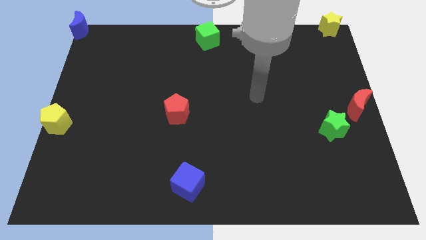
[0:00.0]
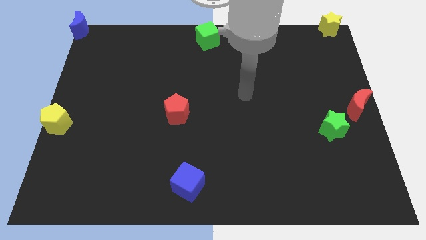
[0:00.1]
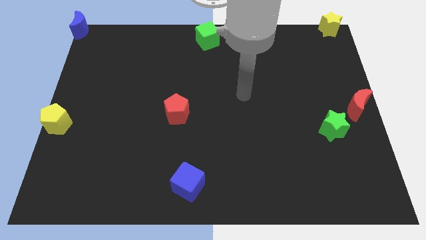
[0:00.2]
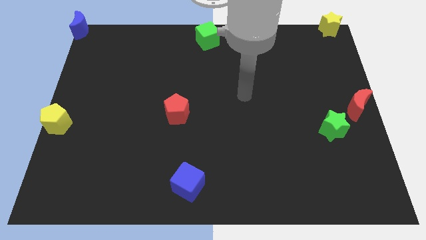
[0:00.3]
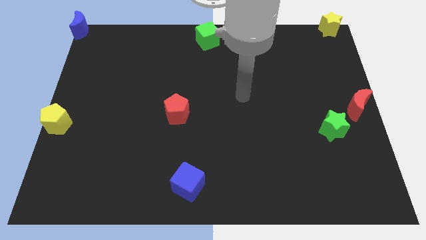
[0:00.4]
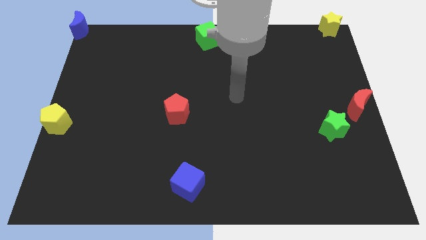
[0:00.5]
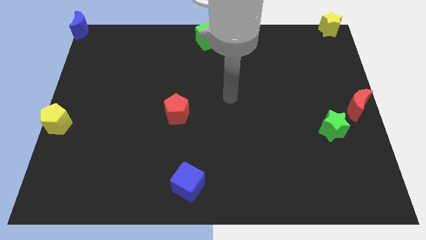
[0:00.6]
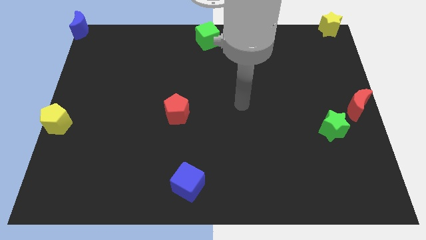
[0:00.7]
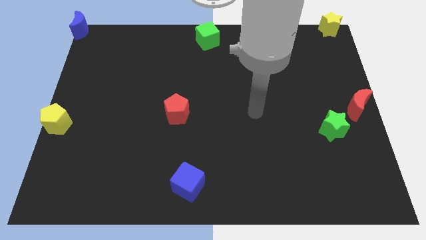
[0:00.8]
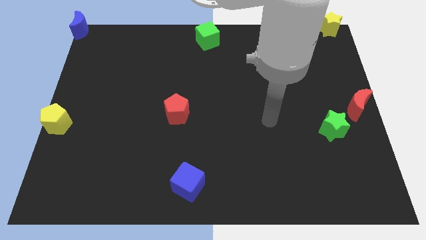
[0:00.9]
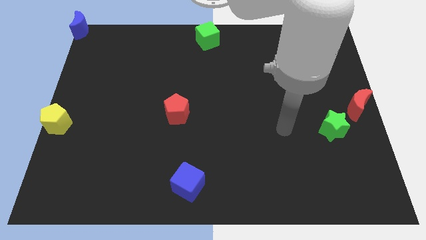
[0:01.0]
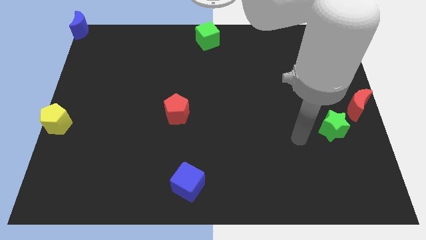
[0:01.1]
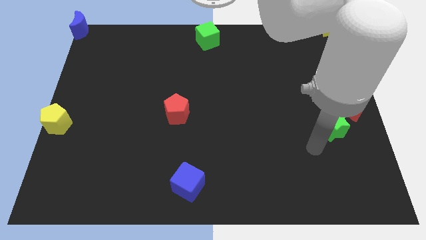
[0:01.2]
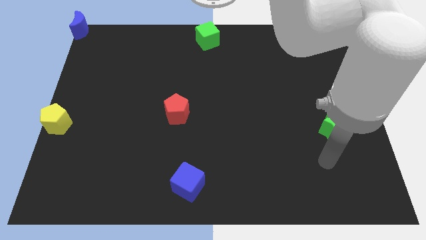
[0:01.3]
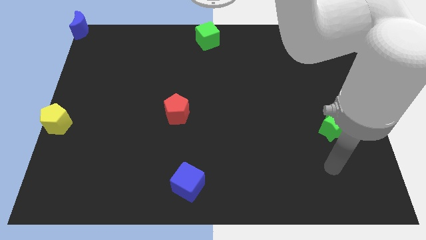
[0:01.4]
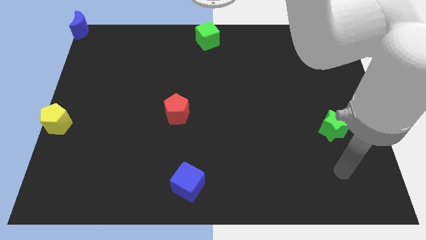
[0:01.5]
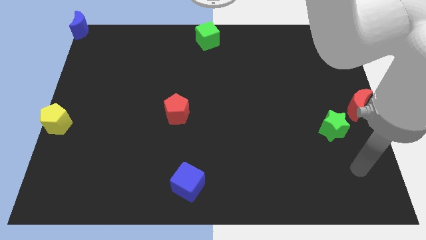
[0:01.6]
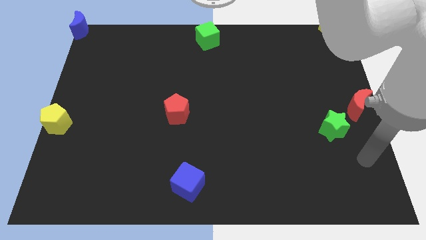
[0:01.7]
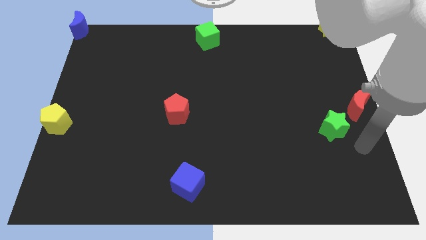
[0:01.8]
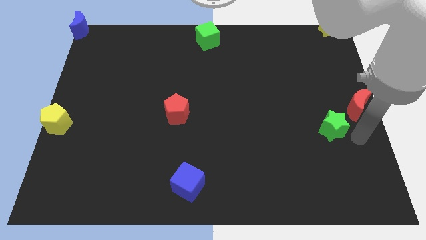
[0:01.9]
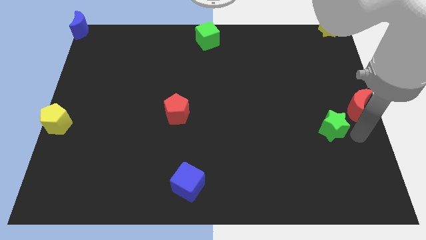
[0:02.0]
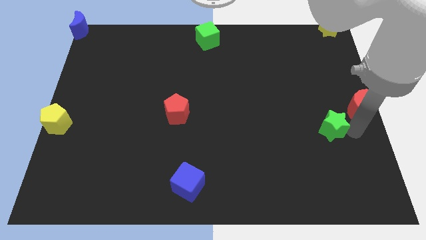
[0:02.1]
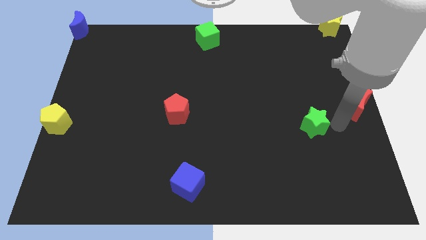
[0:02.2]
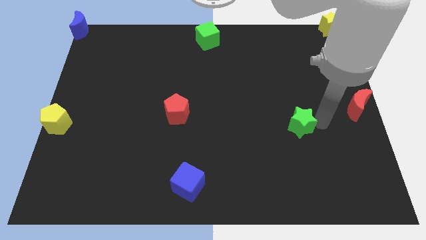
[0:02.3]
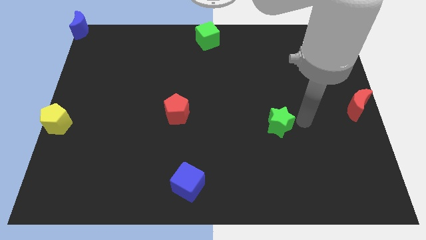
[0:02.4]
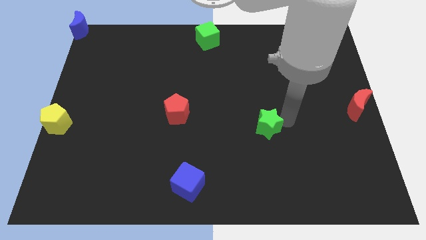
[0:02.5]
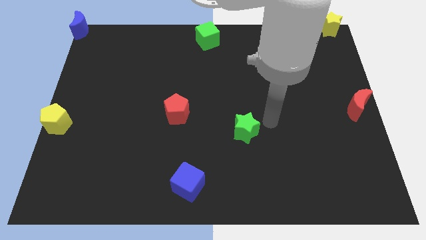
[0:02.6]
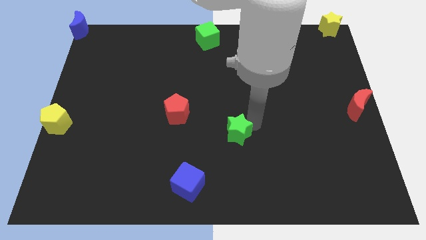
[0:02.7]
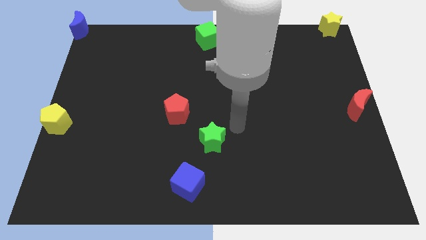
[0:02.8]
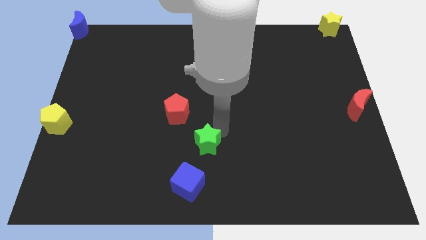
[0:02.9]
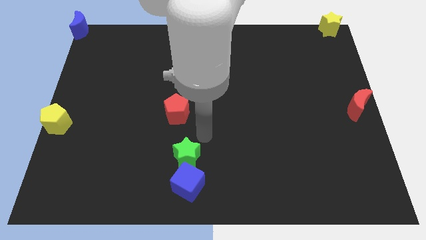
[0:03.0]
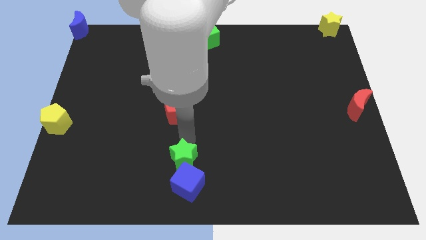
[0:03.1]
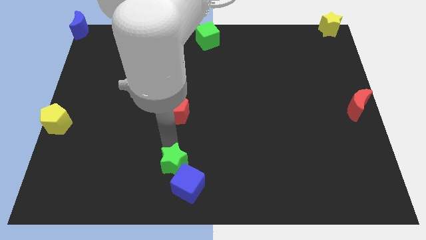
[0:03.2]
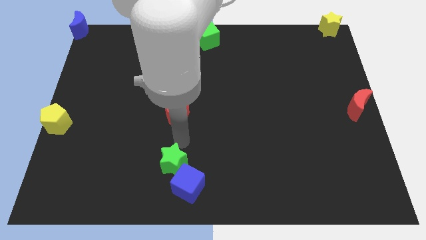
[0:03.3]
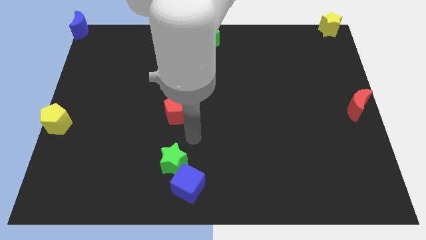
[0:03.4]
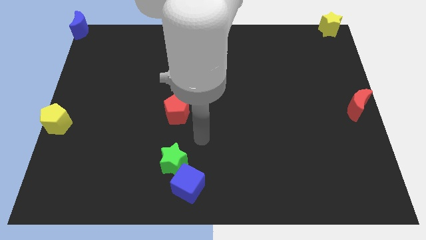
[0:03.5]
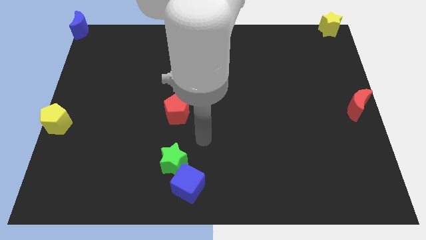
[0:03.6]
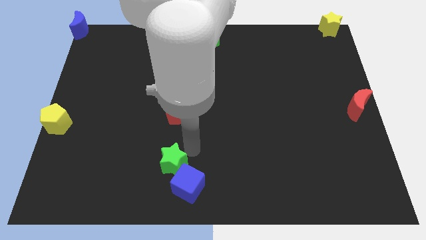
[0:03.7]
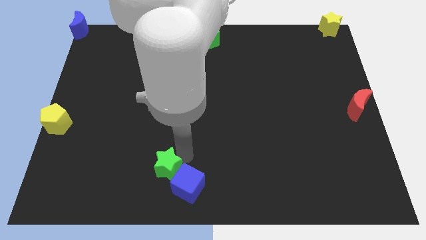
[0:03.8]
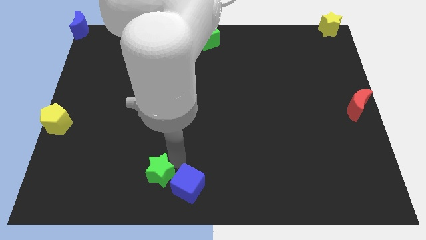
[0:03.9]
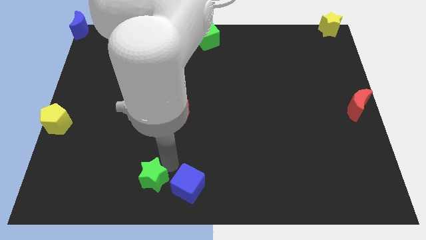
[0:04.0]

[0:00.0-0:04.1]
place green star left to blue cube

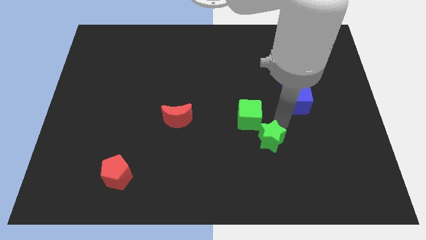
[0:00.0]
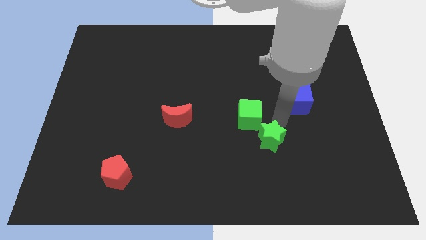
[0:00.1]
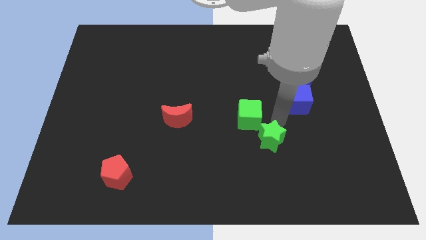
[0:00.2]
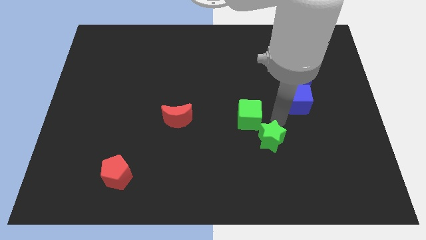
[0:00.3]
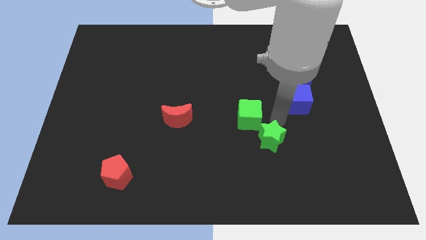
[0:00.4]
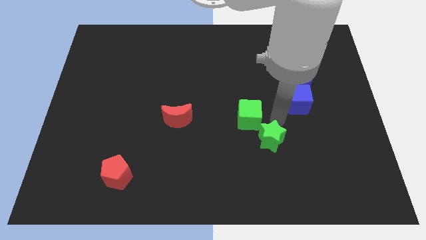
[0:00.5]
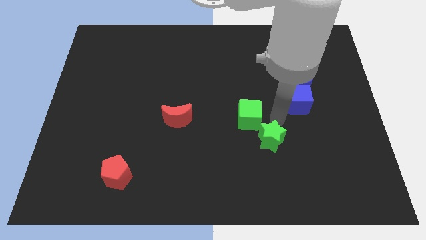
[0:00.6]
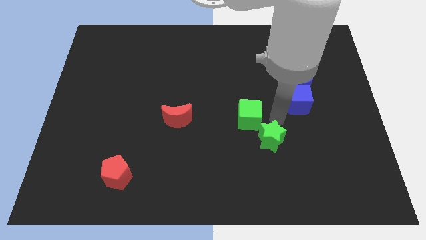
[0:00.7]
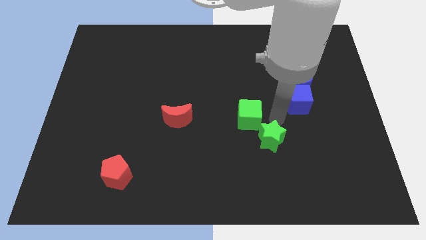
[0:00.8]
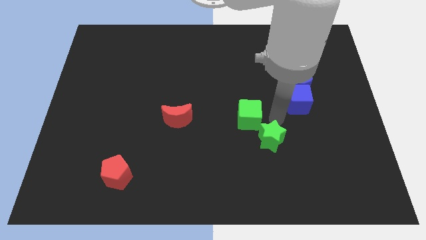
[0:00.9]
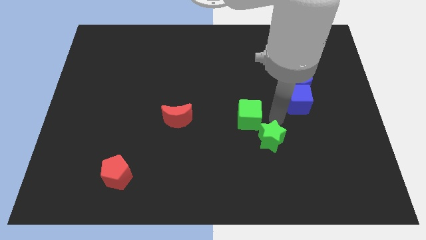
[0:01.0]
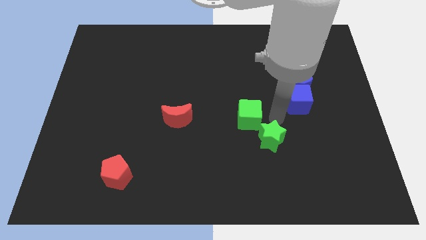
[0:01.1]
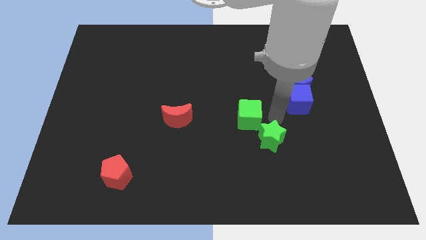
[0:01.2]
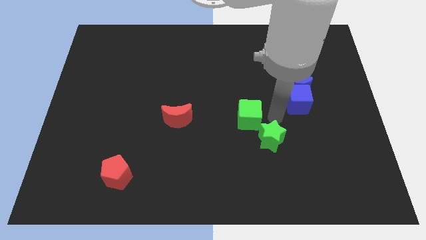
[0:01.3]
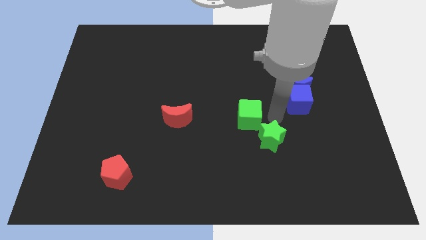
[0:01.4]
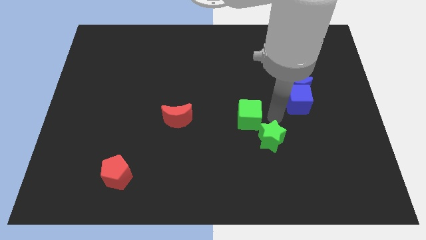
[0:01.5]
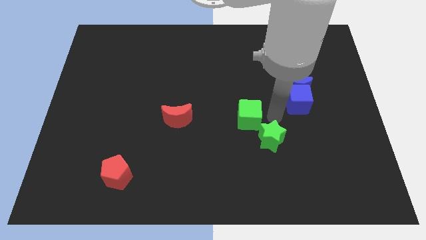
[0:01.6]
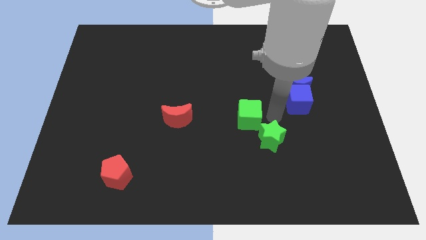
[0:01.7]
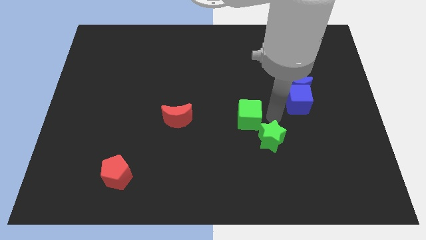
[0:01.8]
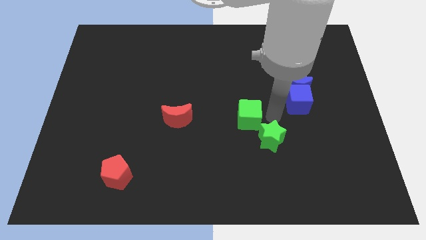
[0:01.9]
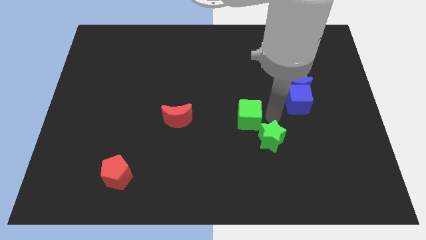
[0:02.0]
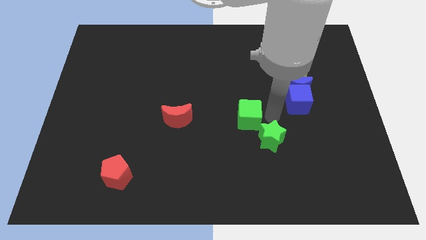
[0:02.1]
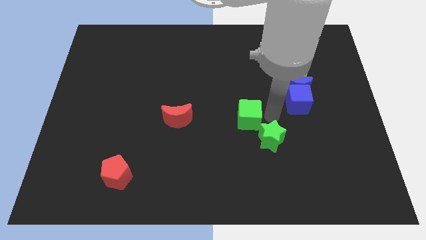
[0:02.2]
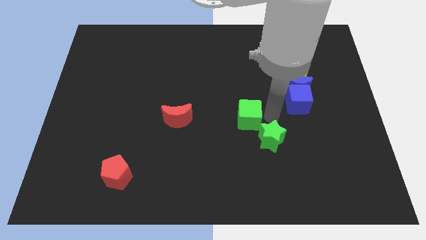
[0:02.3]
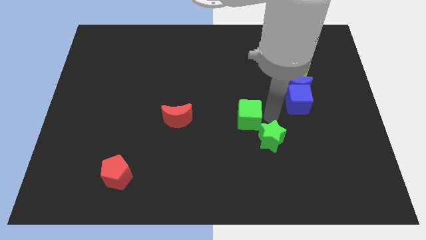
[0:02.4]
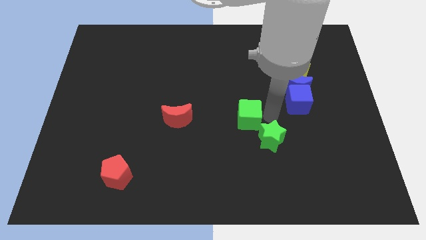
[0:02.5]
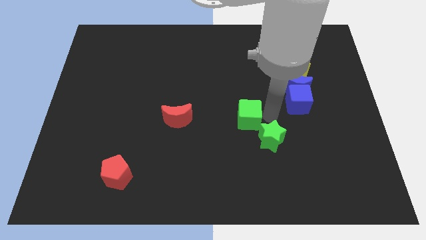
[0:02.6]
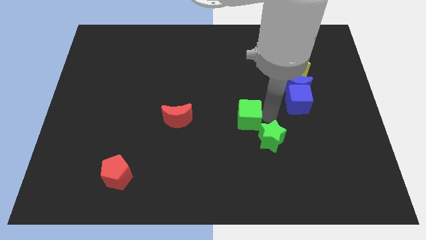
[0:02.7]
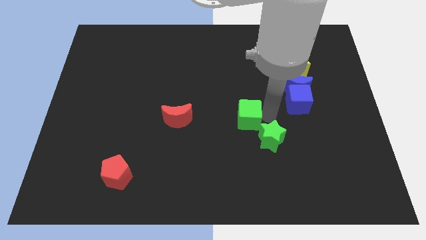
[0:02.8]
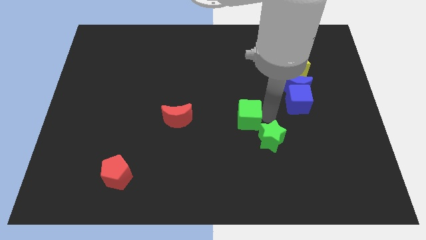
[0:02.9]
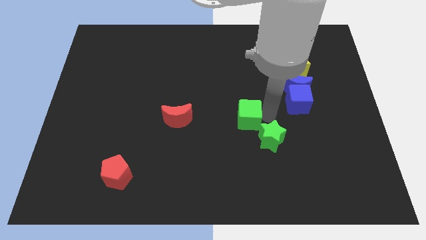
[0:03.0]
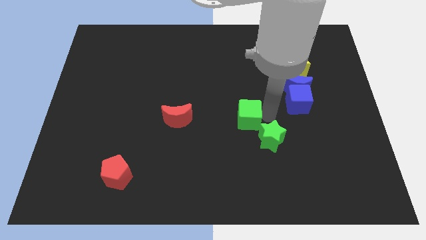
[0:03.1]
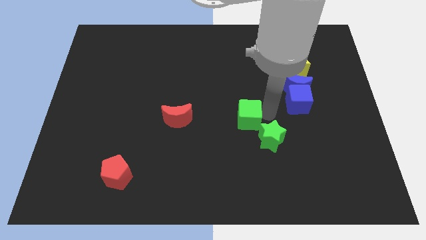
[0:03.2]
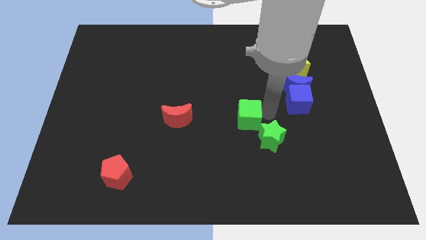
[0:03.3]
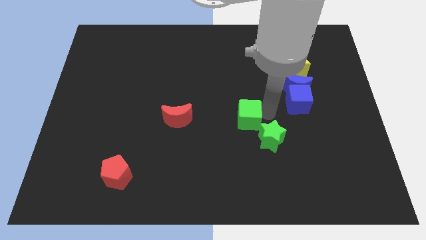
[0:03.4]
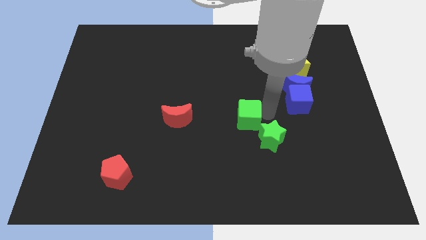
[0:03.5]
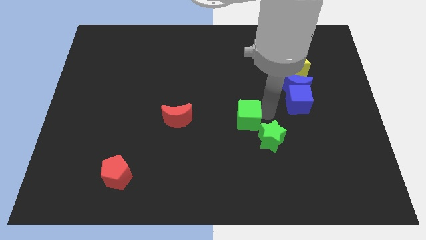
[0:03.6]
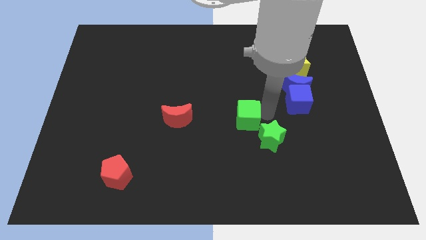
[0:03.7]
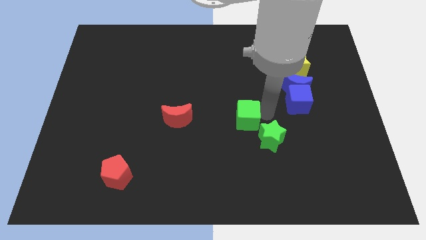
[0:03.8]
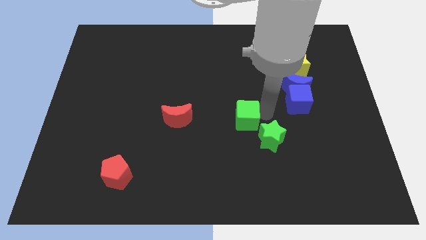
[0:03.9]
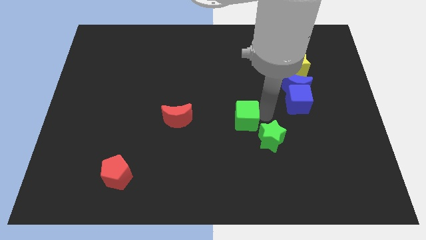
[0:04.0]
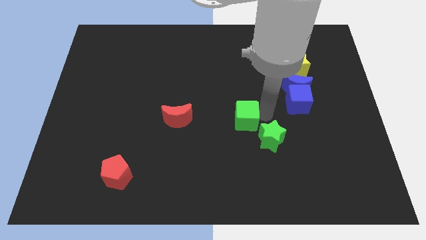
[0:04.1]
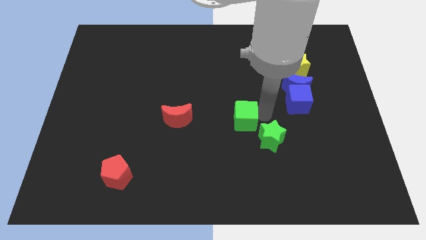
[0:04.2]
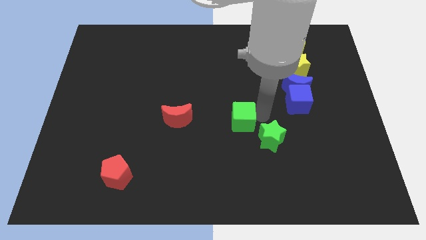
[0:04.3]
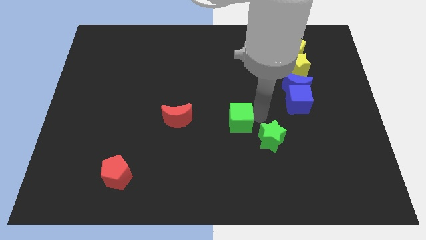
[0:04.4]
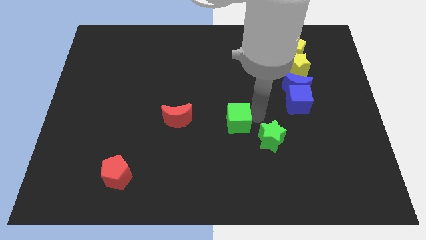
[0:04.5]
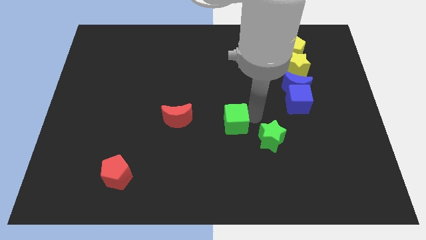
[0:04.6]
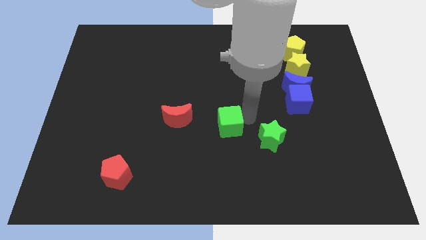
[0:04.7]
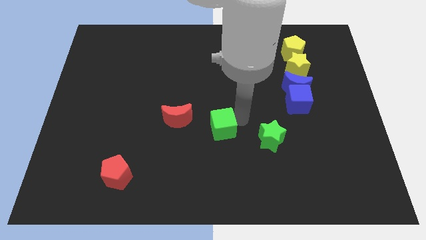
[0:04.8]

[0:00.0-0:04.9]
place the green cube close to the red crescent green star
